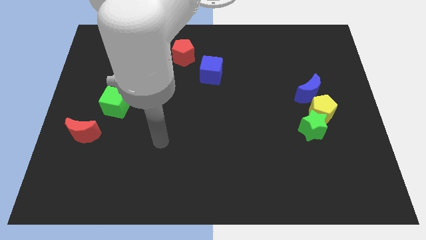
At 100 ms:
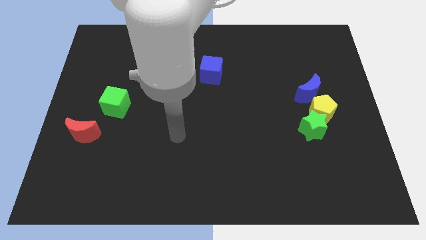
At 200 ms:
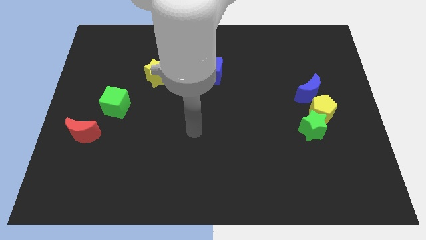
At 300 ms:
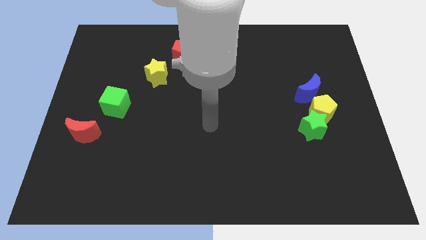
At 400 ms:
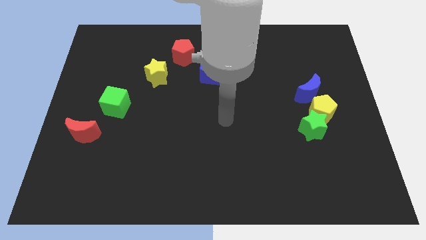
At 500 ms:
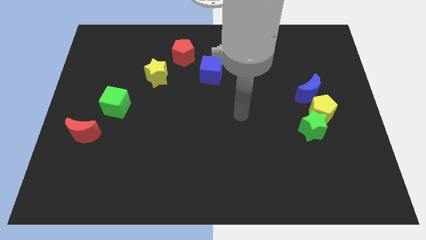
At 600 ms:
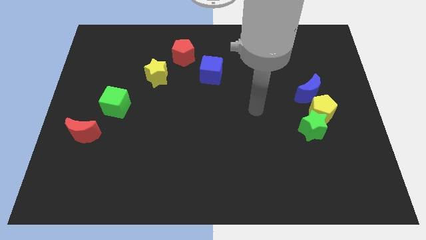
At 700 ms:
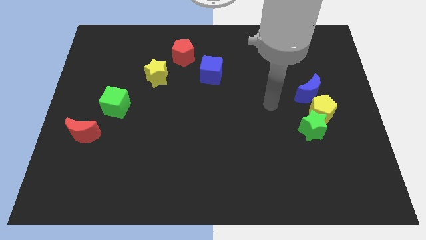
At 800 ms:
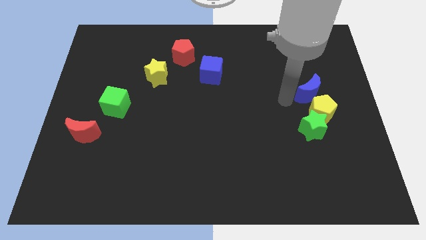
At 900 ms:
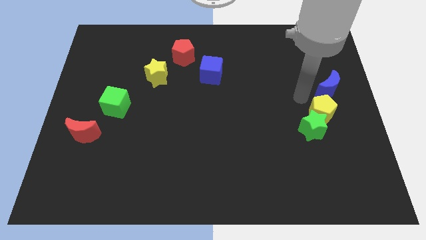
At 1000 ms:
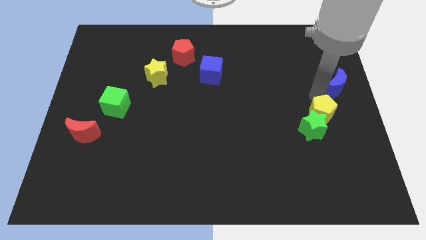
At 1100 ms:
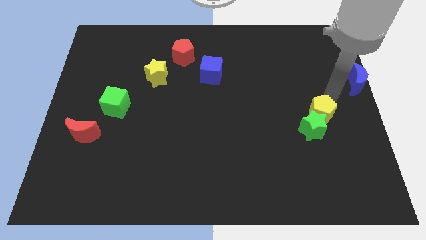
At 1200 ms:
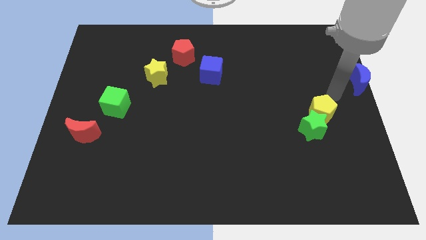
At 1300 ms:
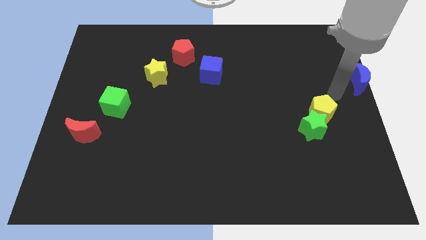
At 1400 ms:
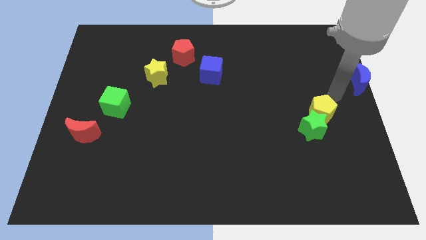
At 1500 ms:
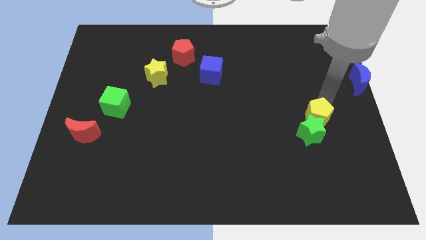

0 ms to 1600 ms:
move the blue moon diagonally top right to the yellow pentagon

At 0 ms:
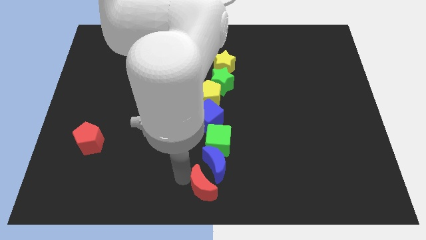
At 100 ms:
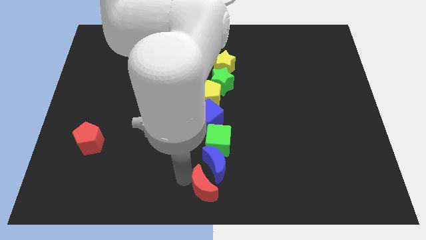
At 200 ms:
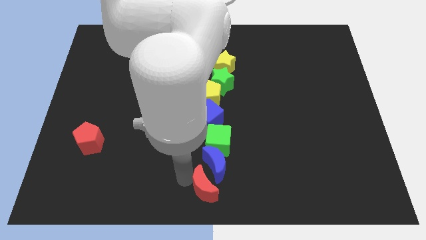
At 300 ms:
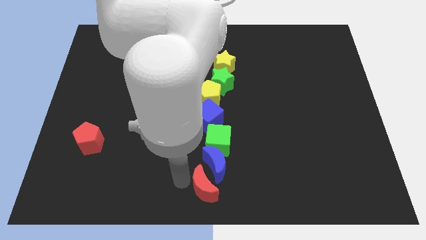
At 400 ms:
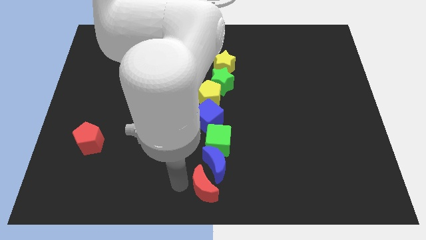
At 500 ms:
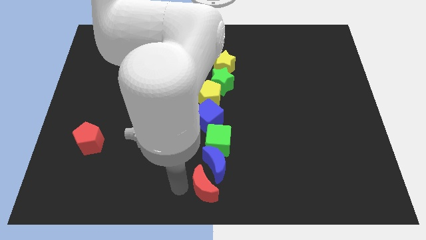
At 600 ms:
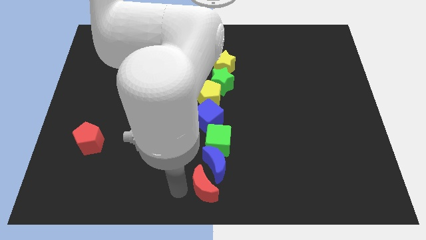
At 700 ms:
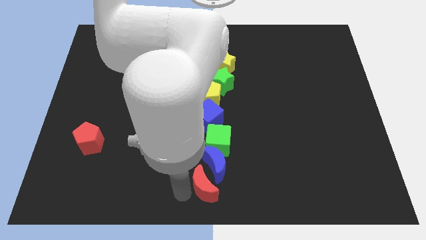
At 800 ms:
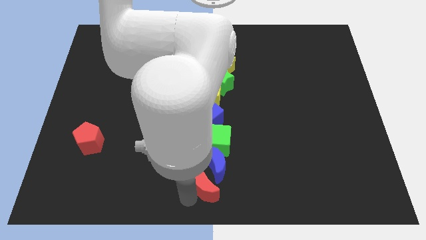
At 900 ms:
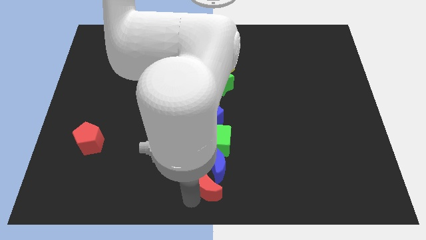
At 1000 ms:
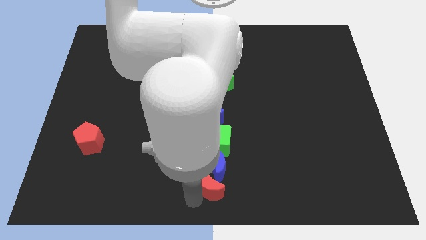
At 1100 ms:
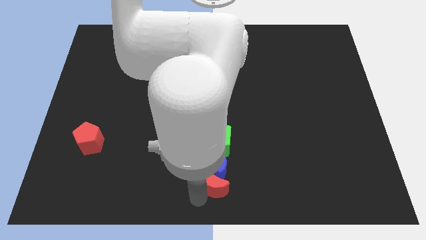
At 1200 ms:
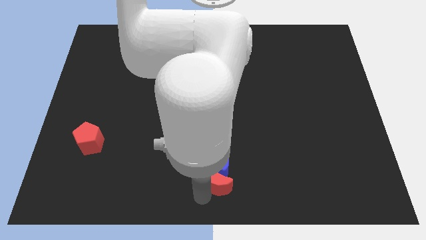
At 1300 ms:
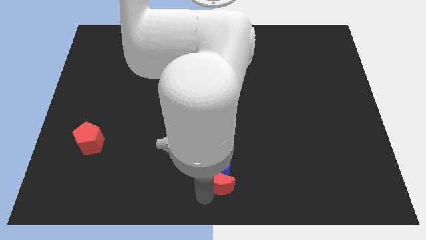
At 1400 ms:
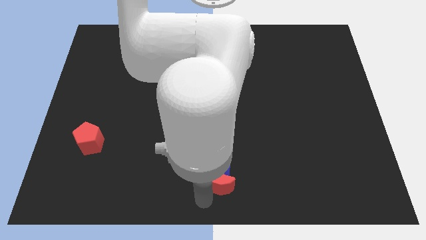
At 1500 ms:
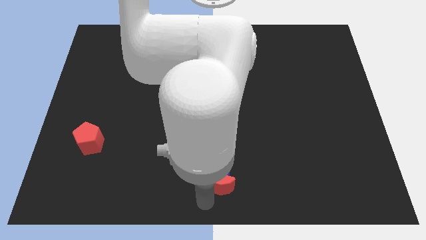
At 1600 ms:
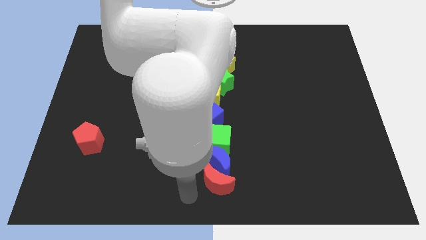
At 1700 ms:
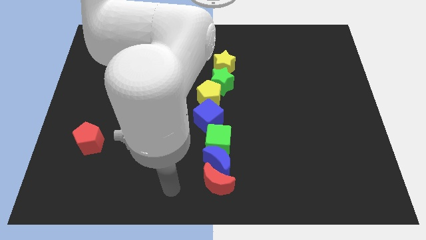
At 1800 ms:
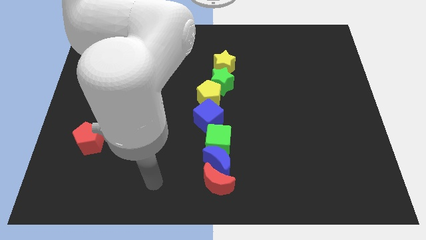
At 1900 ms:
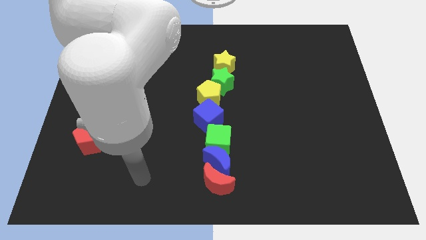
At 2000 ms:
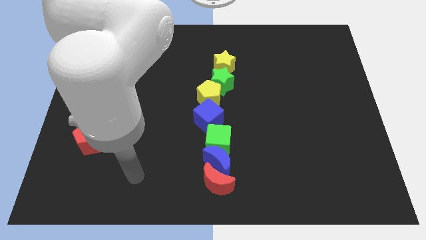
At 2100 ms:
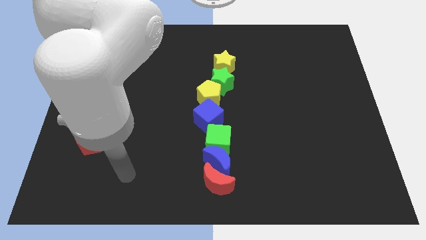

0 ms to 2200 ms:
push the red moon into the blue moon

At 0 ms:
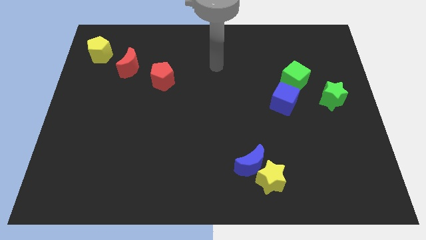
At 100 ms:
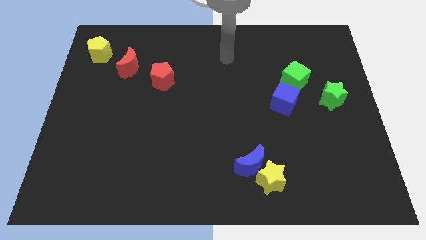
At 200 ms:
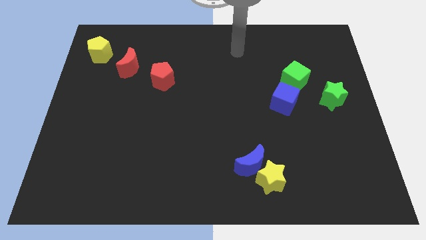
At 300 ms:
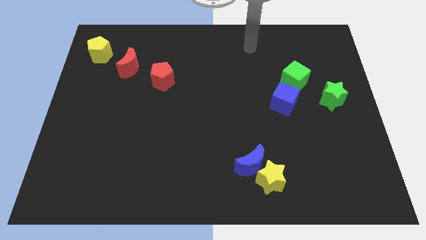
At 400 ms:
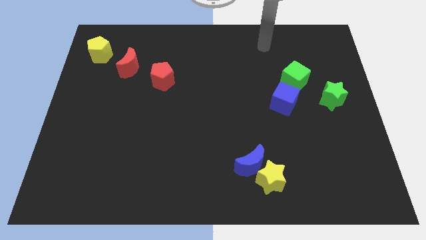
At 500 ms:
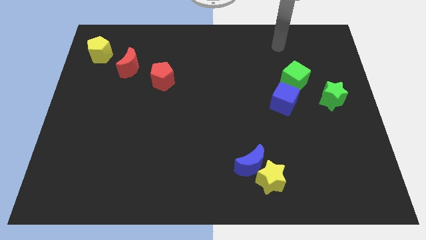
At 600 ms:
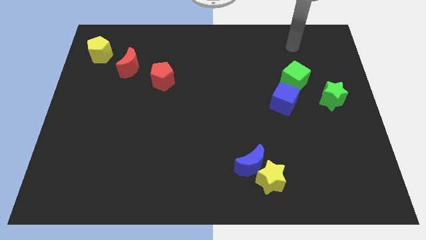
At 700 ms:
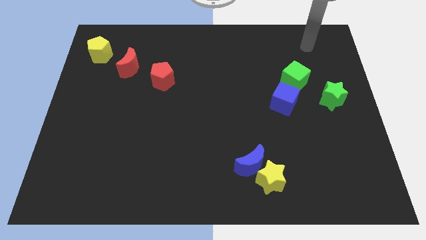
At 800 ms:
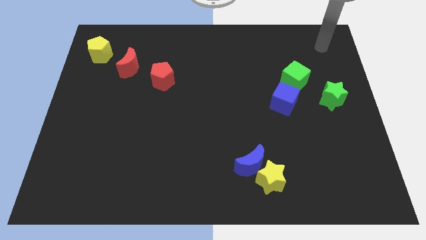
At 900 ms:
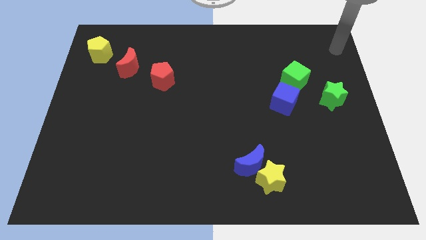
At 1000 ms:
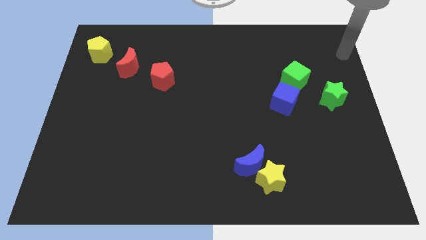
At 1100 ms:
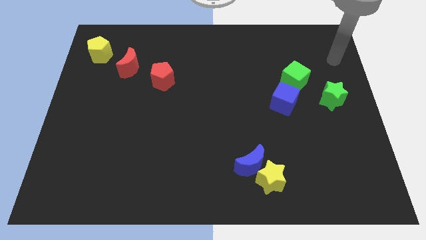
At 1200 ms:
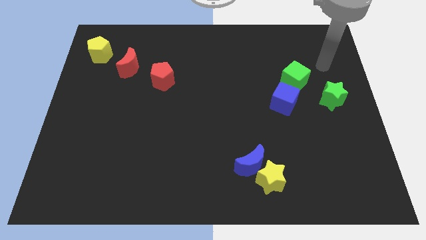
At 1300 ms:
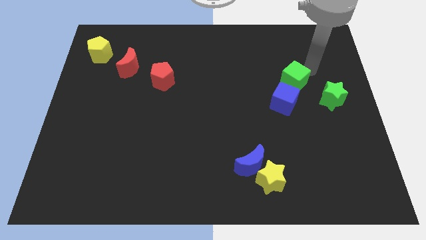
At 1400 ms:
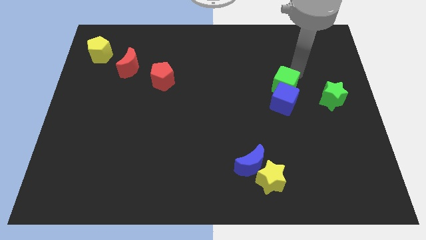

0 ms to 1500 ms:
move the arm close to green cube

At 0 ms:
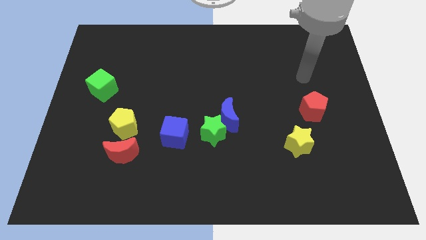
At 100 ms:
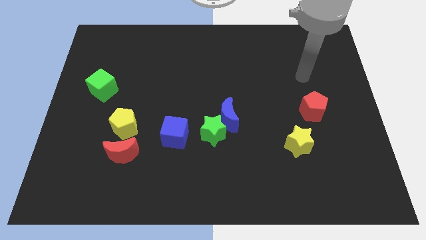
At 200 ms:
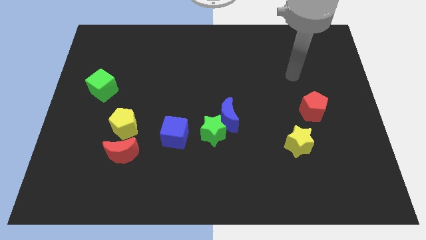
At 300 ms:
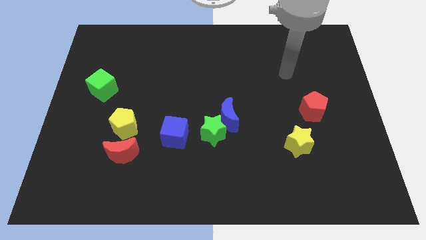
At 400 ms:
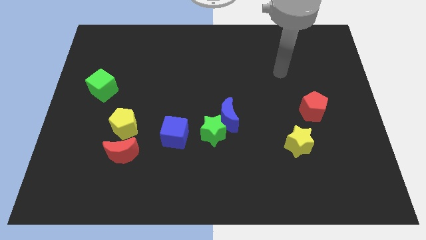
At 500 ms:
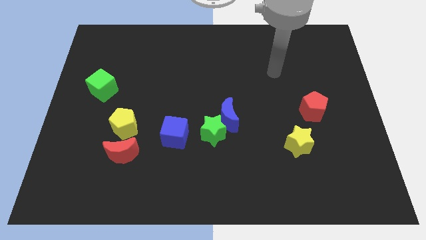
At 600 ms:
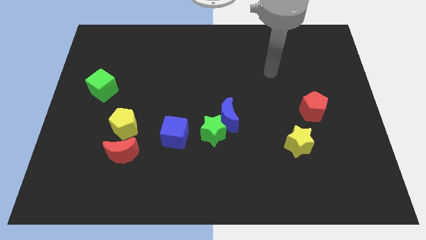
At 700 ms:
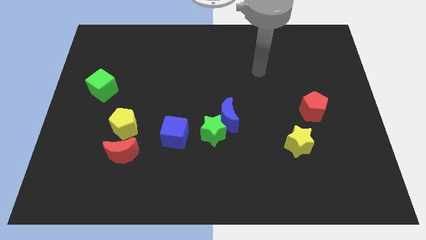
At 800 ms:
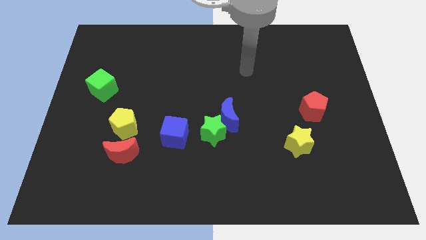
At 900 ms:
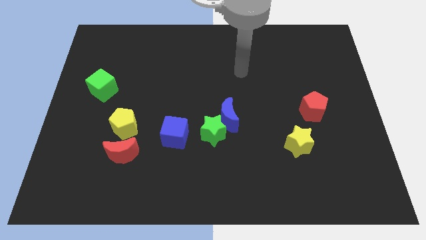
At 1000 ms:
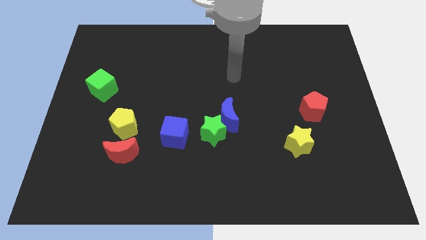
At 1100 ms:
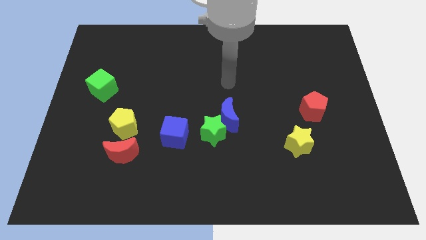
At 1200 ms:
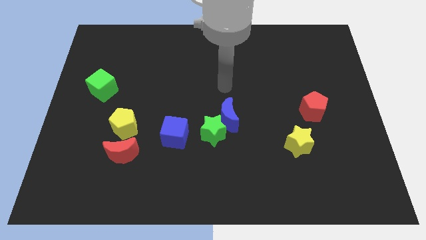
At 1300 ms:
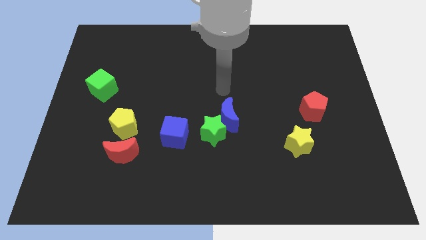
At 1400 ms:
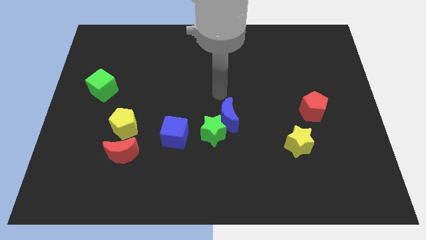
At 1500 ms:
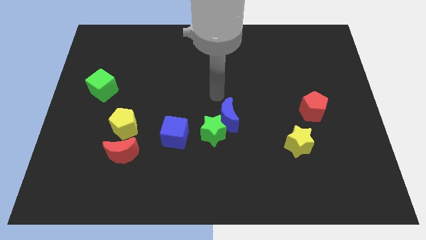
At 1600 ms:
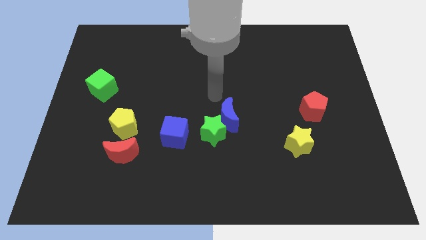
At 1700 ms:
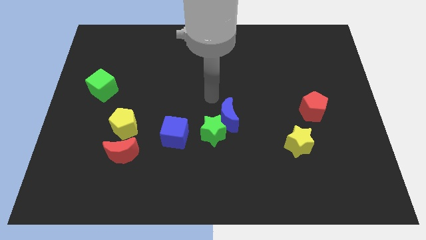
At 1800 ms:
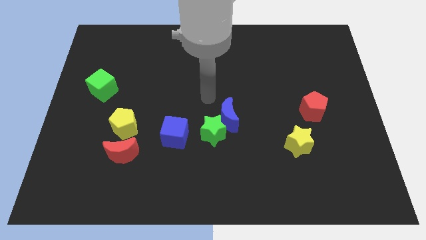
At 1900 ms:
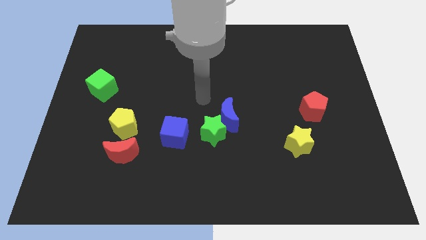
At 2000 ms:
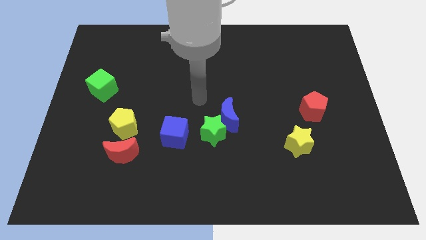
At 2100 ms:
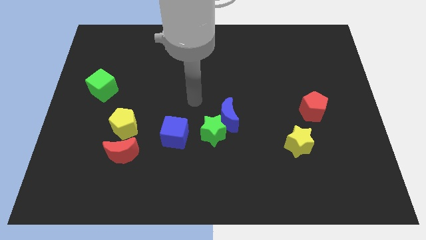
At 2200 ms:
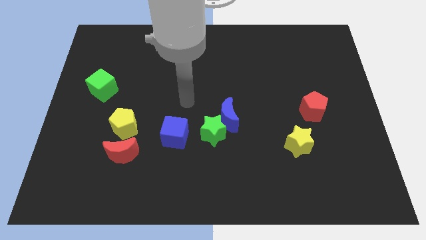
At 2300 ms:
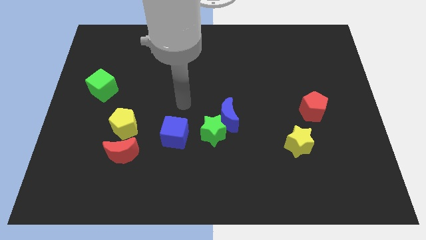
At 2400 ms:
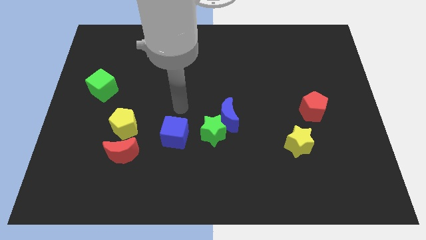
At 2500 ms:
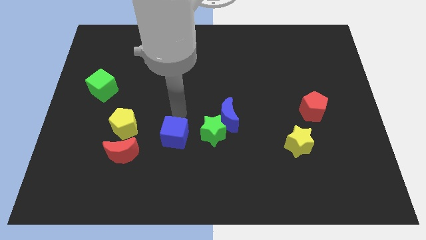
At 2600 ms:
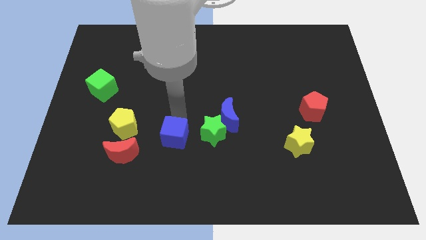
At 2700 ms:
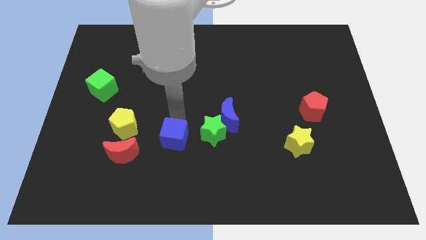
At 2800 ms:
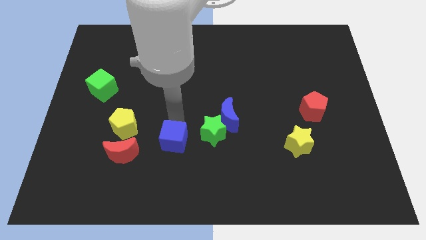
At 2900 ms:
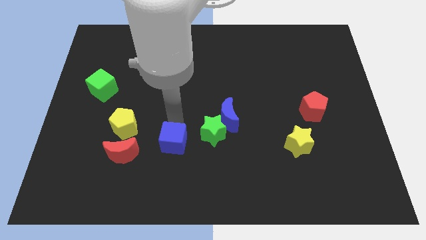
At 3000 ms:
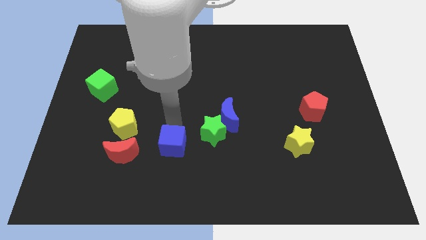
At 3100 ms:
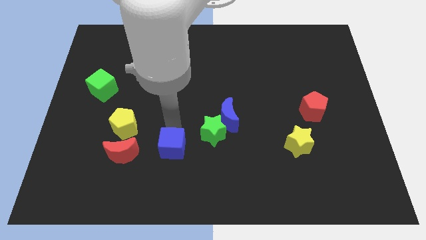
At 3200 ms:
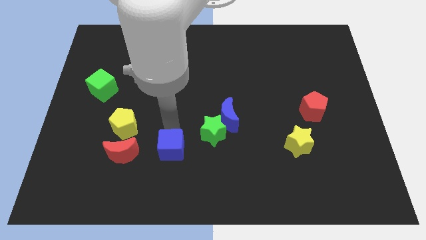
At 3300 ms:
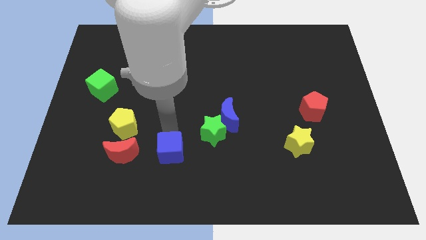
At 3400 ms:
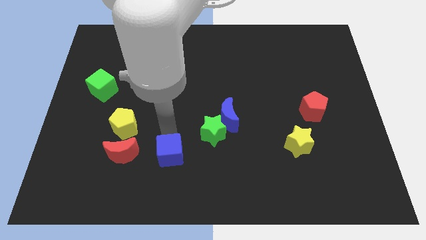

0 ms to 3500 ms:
put the blue cube to the right side of the red moon
